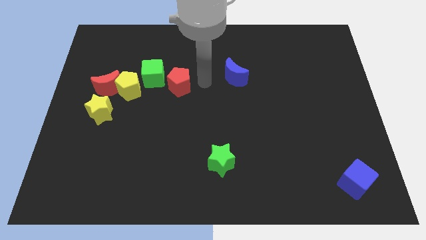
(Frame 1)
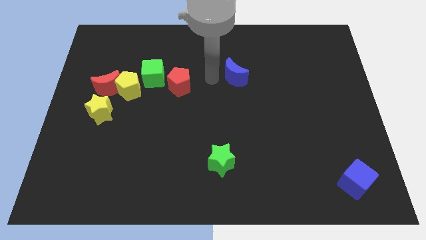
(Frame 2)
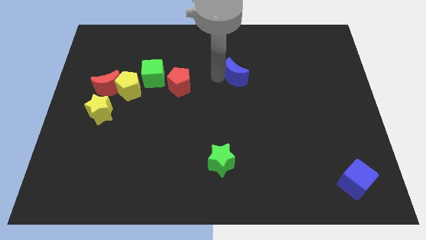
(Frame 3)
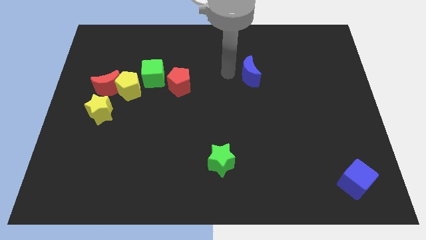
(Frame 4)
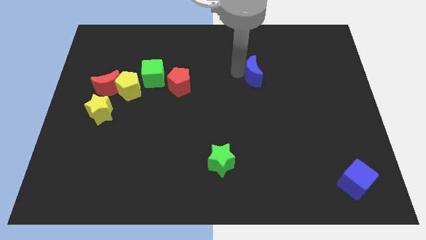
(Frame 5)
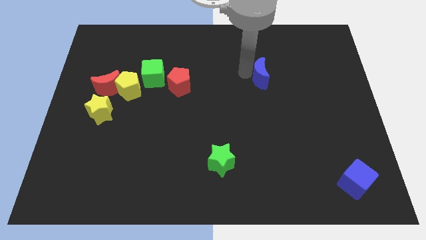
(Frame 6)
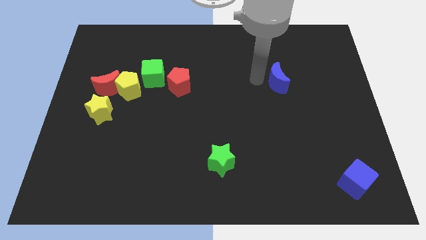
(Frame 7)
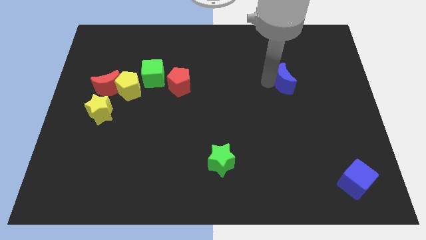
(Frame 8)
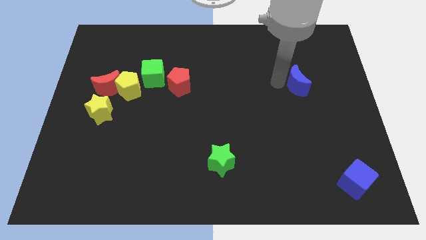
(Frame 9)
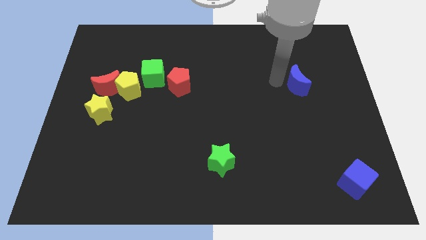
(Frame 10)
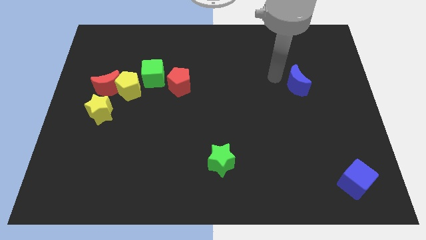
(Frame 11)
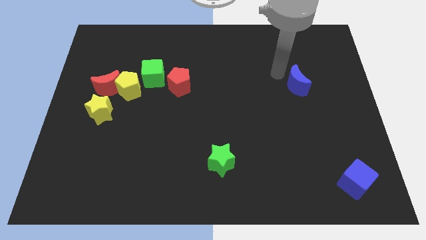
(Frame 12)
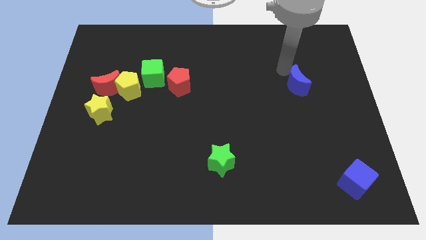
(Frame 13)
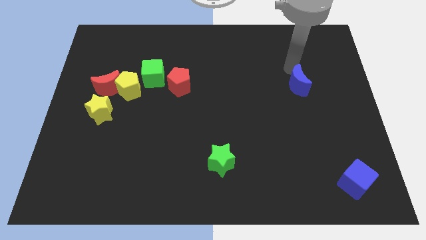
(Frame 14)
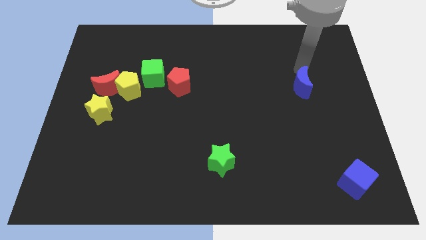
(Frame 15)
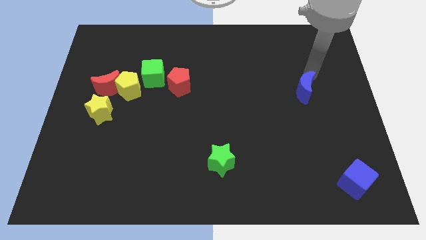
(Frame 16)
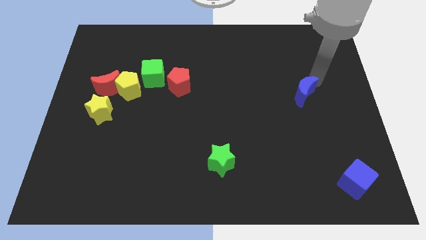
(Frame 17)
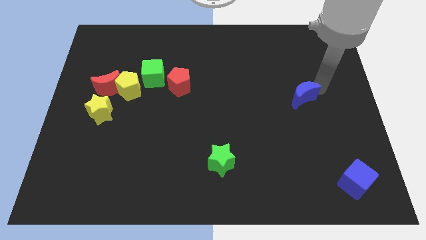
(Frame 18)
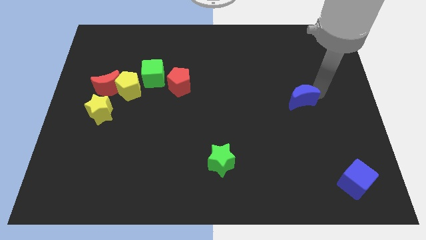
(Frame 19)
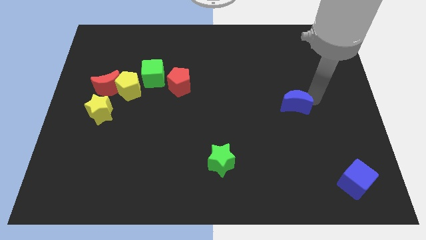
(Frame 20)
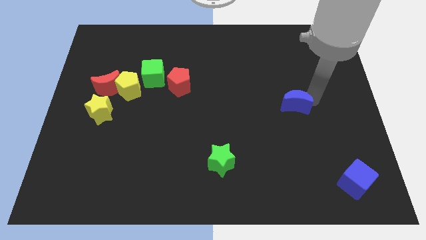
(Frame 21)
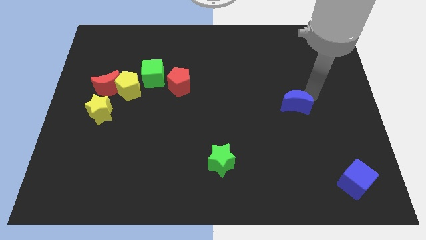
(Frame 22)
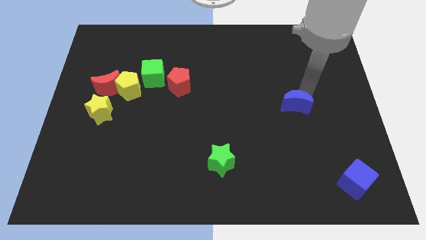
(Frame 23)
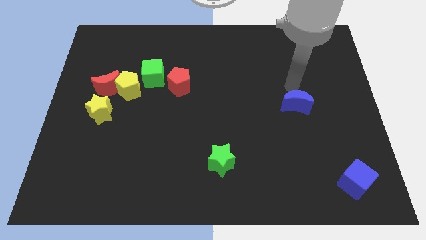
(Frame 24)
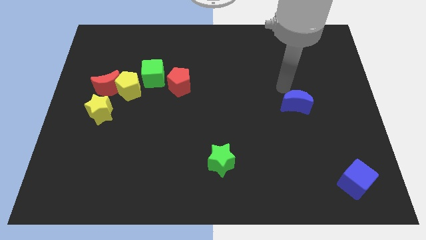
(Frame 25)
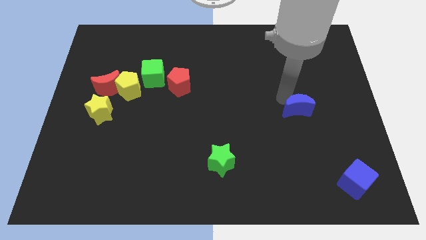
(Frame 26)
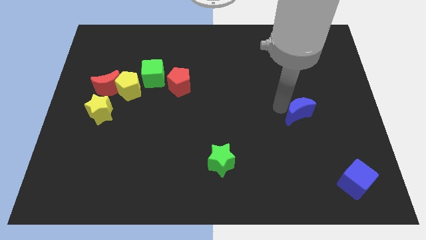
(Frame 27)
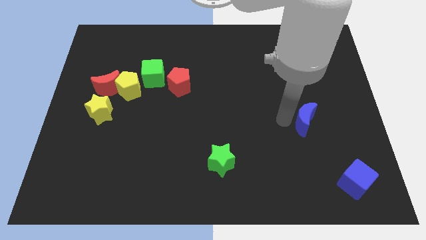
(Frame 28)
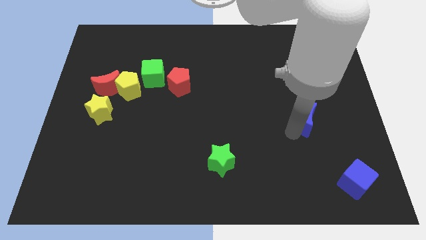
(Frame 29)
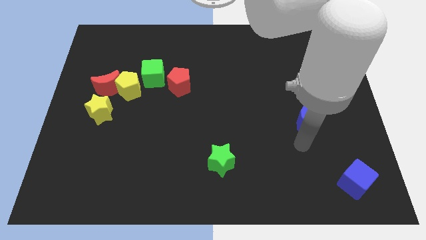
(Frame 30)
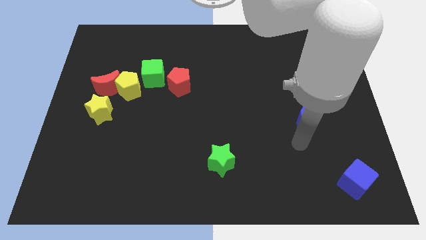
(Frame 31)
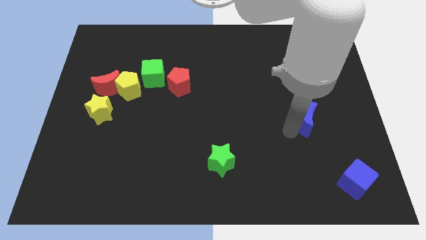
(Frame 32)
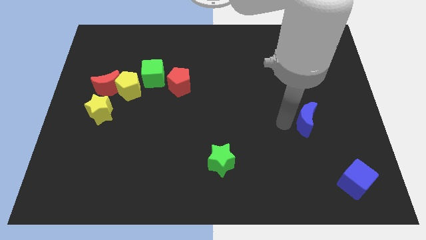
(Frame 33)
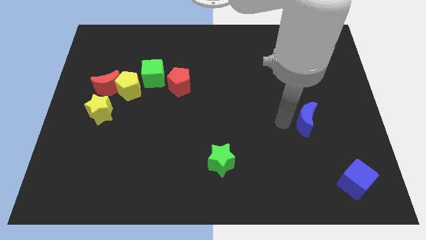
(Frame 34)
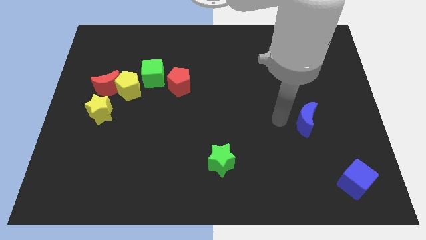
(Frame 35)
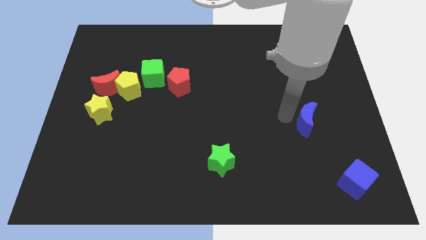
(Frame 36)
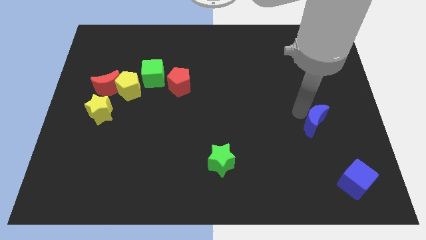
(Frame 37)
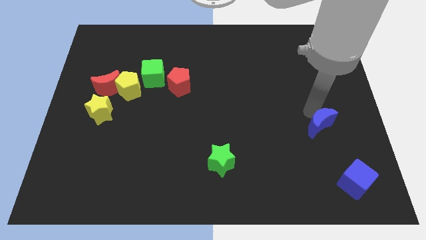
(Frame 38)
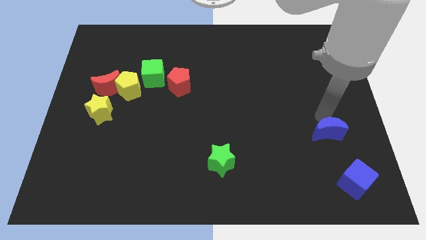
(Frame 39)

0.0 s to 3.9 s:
place blue crescent above the blue cube

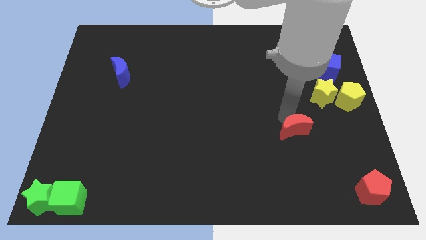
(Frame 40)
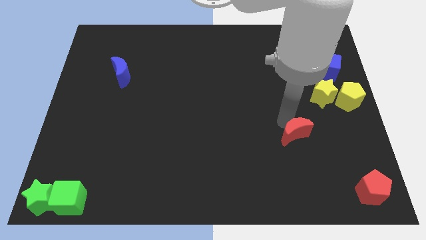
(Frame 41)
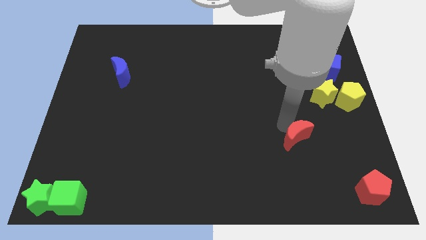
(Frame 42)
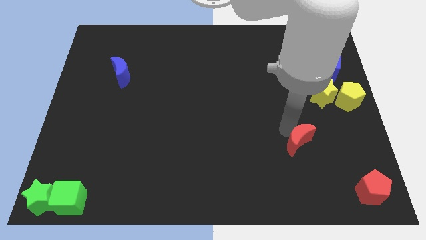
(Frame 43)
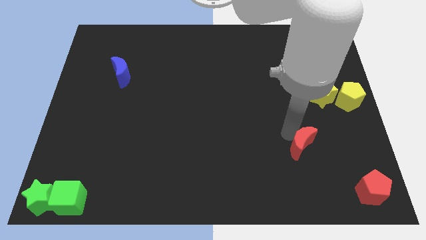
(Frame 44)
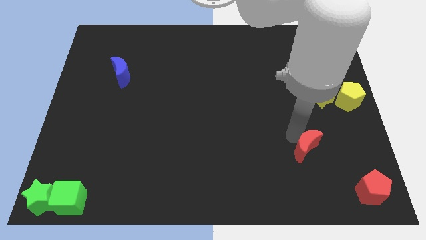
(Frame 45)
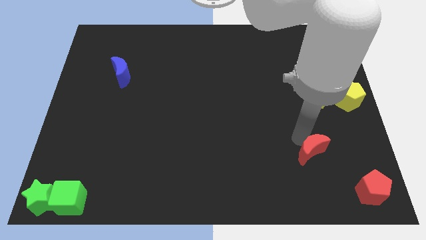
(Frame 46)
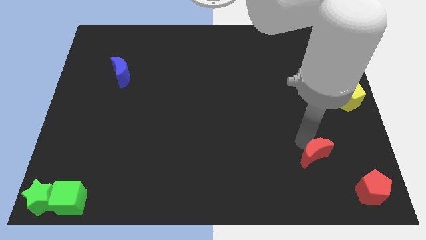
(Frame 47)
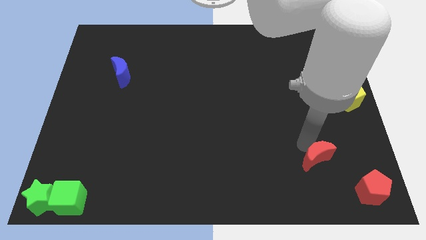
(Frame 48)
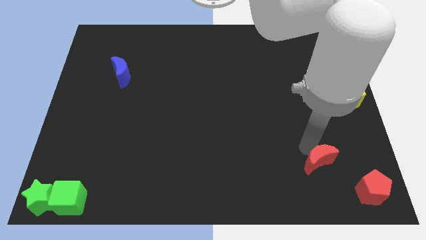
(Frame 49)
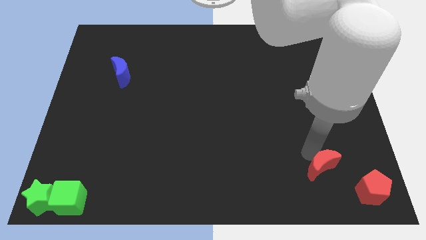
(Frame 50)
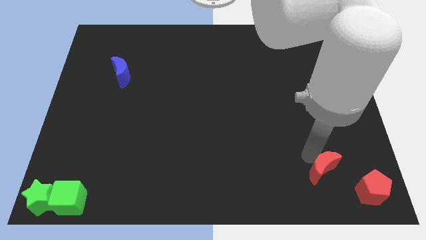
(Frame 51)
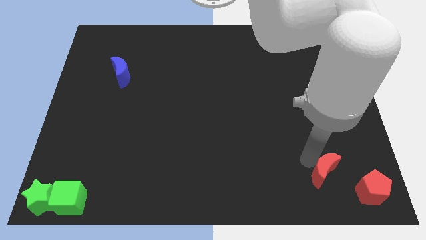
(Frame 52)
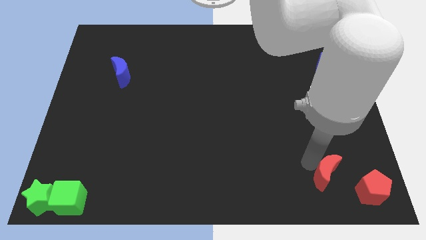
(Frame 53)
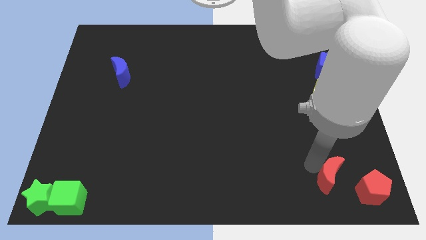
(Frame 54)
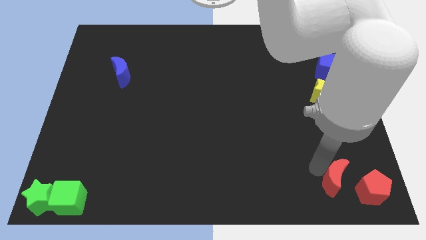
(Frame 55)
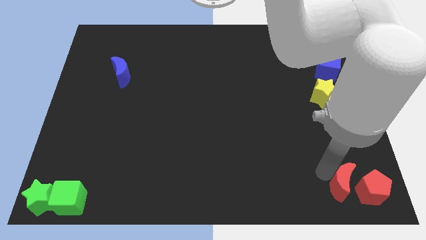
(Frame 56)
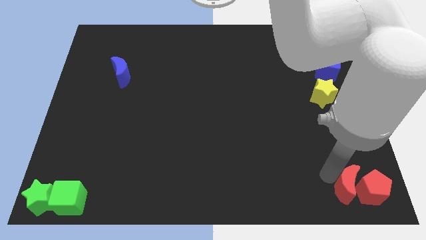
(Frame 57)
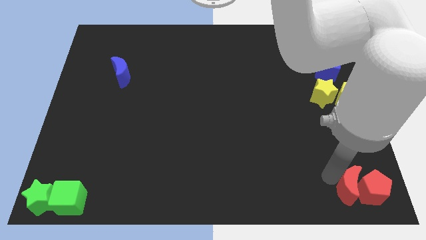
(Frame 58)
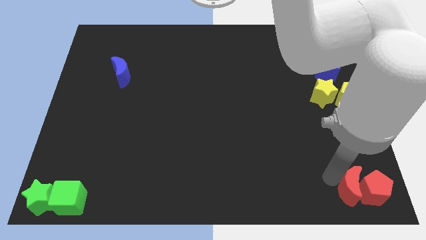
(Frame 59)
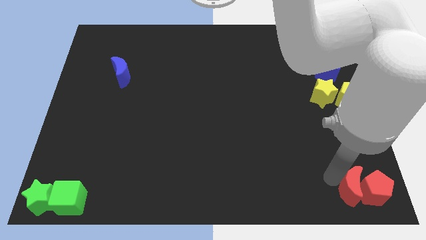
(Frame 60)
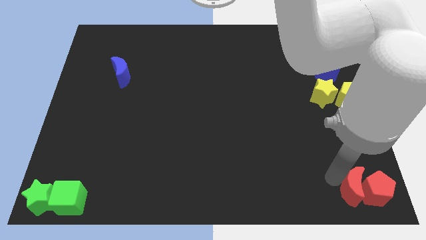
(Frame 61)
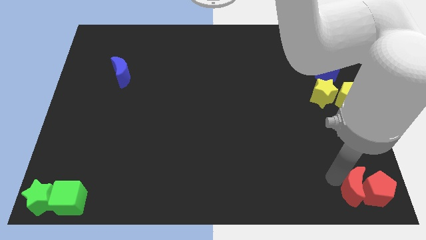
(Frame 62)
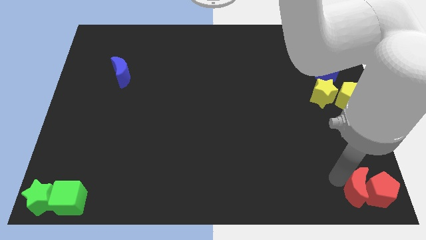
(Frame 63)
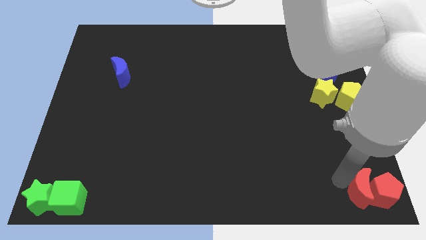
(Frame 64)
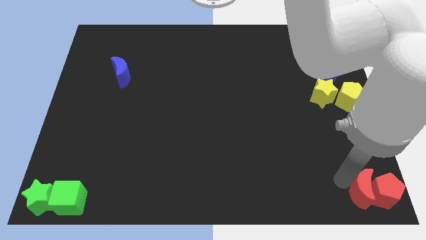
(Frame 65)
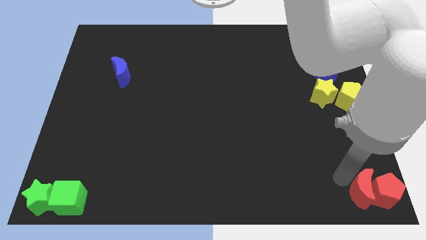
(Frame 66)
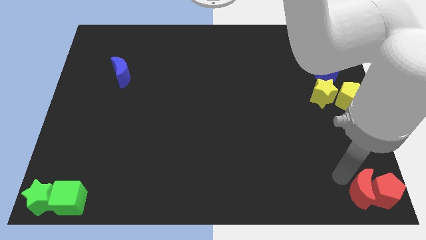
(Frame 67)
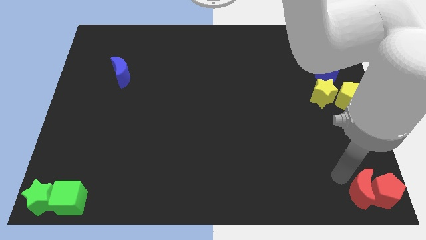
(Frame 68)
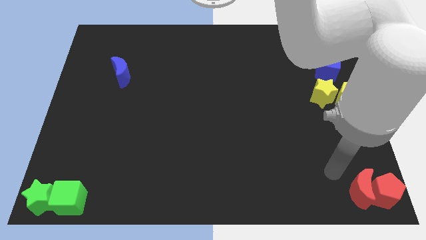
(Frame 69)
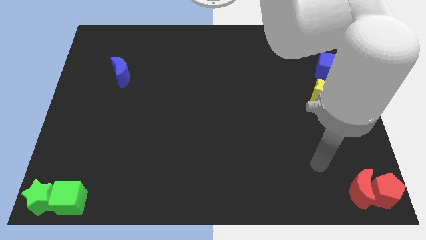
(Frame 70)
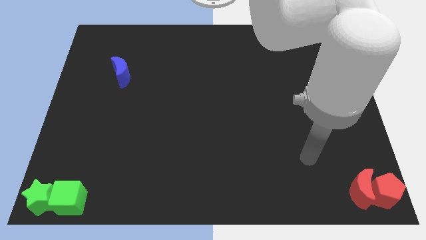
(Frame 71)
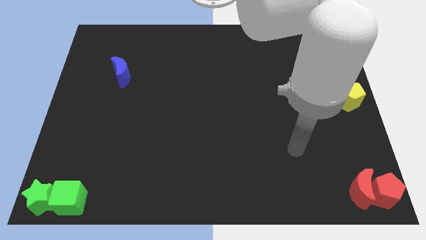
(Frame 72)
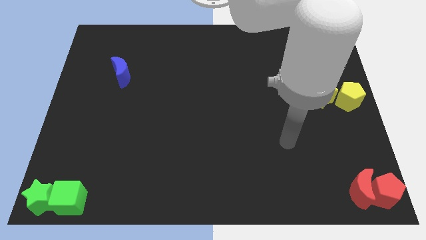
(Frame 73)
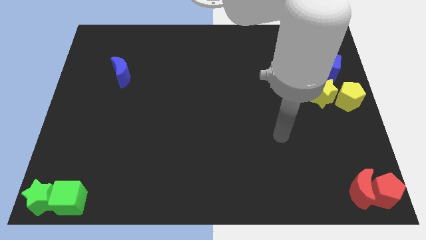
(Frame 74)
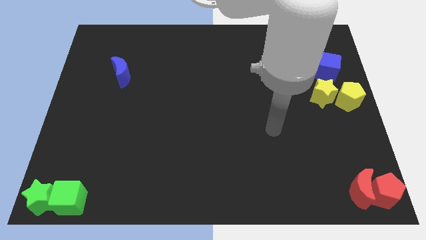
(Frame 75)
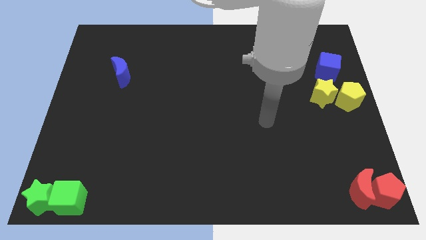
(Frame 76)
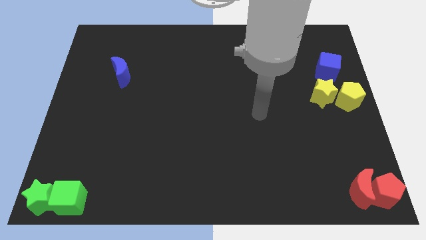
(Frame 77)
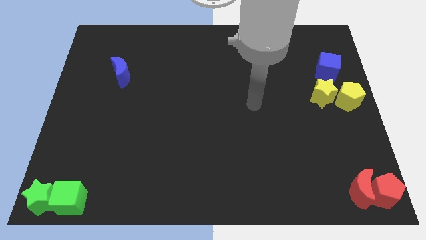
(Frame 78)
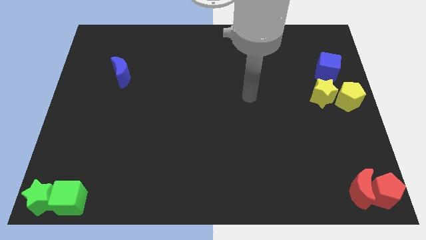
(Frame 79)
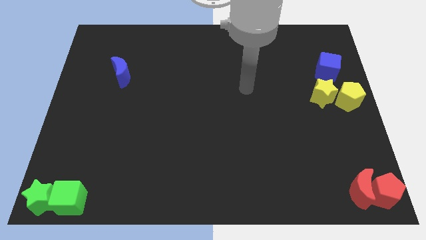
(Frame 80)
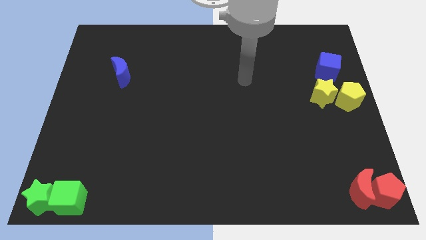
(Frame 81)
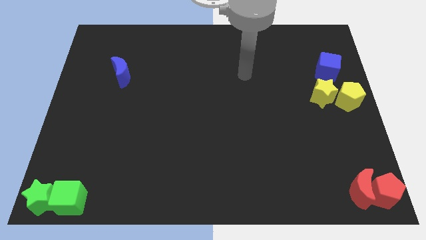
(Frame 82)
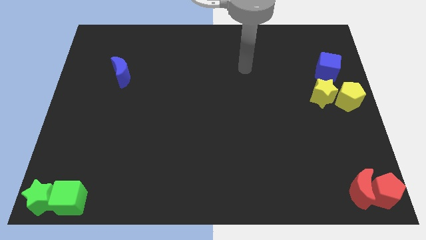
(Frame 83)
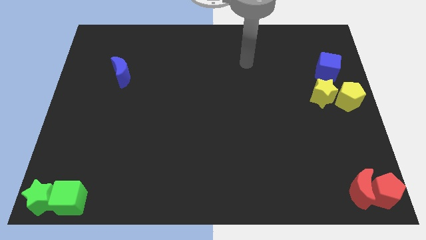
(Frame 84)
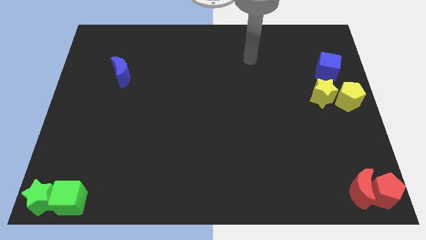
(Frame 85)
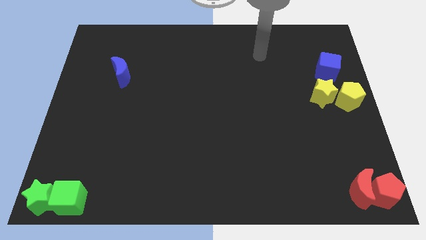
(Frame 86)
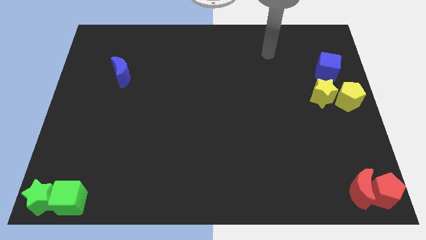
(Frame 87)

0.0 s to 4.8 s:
place the red crescent to the left of the red pentagon

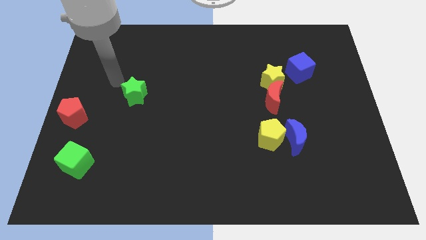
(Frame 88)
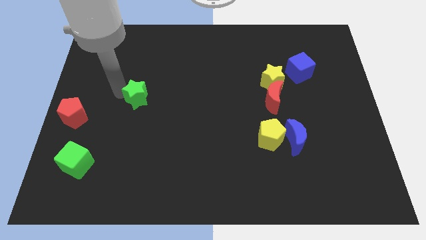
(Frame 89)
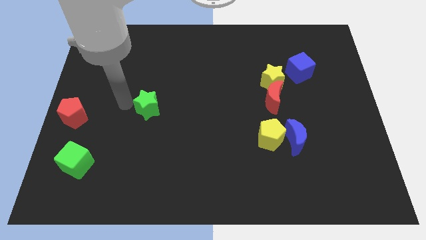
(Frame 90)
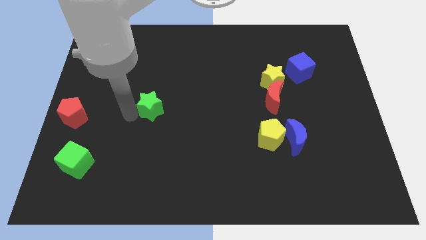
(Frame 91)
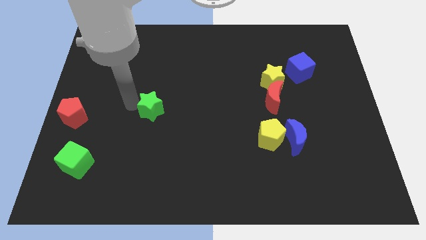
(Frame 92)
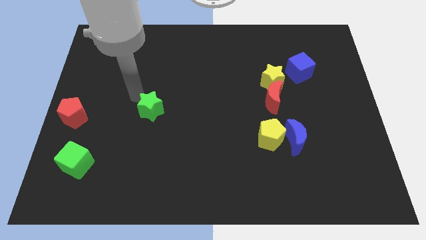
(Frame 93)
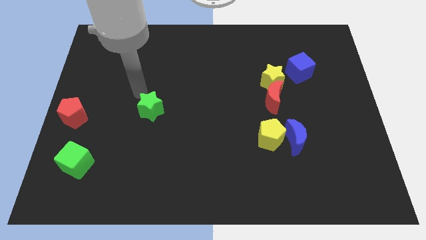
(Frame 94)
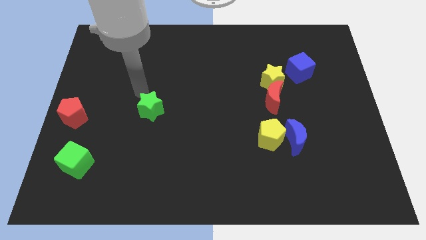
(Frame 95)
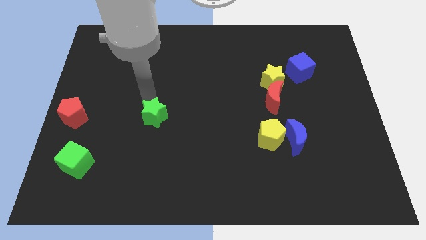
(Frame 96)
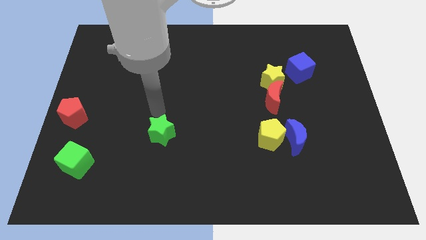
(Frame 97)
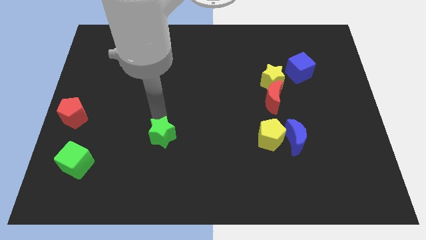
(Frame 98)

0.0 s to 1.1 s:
push the green star downwards of the board
